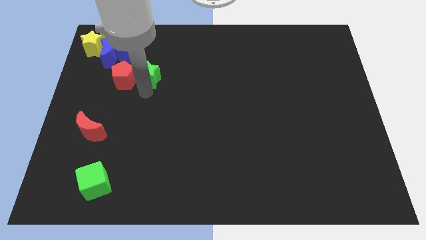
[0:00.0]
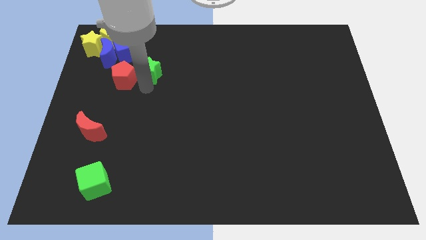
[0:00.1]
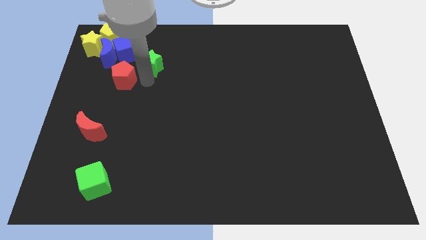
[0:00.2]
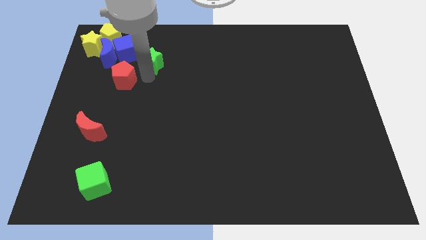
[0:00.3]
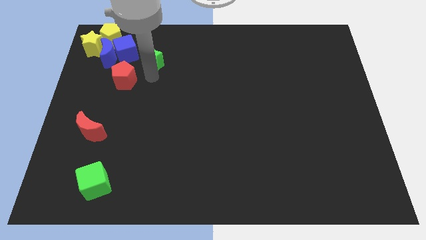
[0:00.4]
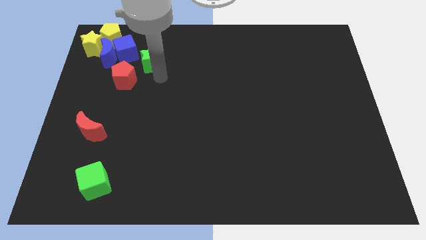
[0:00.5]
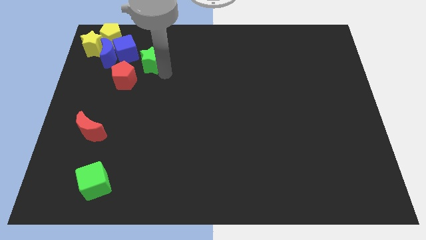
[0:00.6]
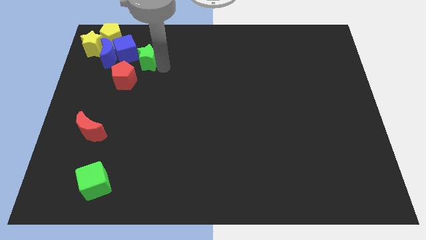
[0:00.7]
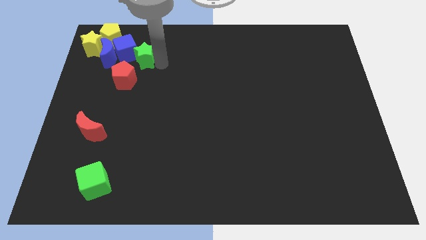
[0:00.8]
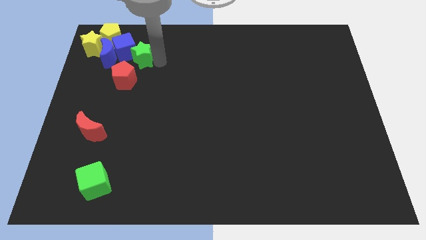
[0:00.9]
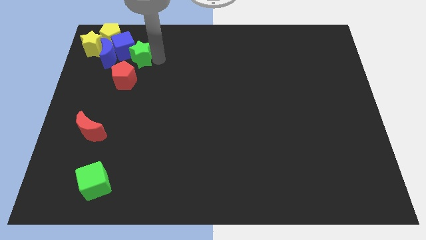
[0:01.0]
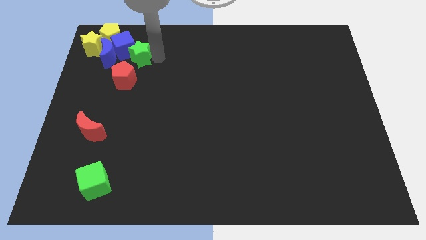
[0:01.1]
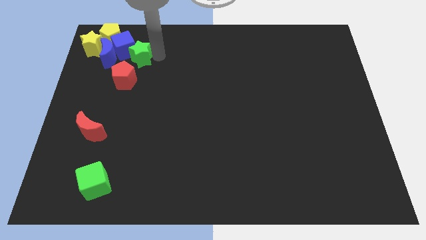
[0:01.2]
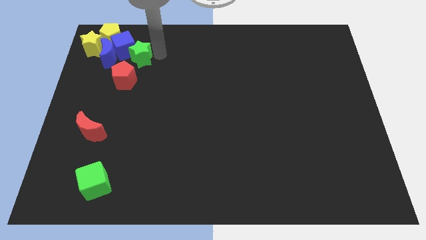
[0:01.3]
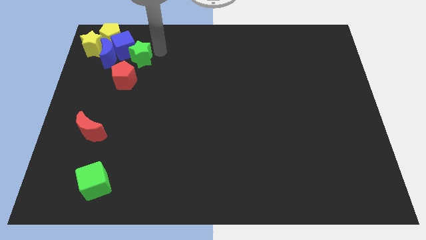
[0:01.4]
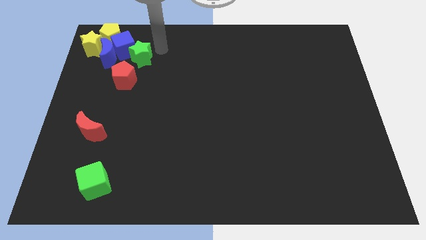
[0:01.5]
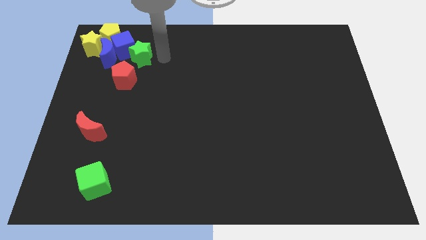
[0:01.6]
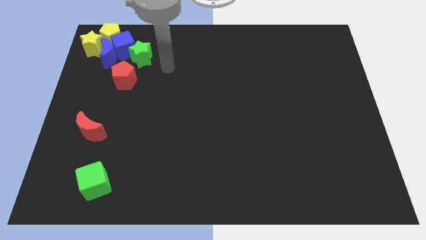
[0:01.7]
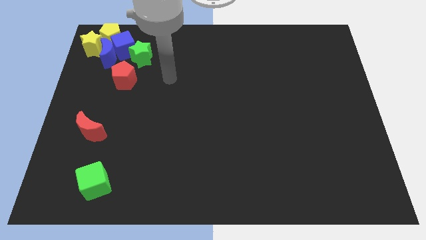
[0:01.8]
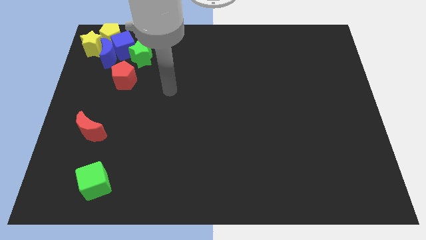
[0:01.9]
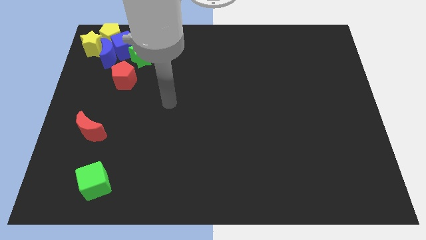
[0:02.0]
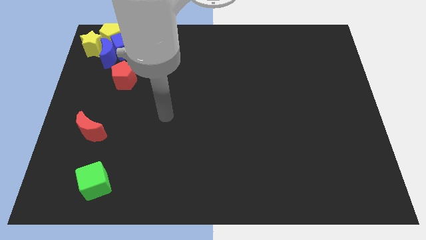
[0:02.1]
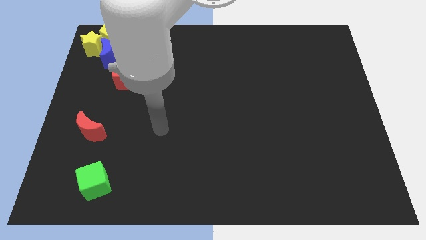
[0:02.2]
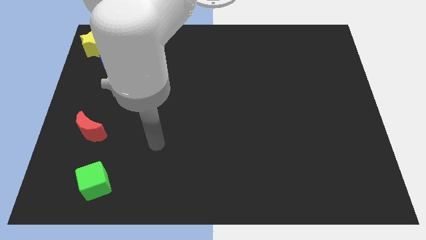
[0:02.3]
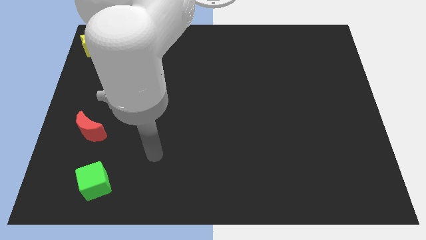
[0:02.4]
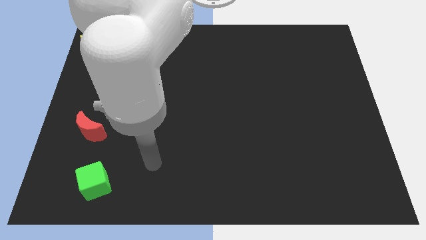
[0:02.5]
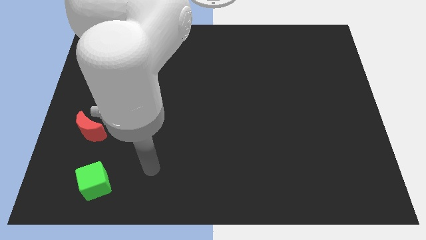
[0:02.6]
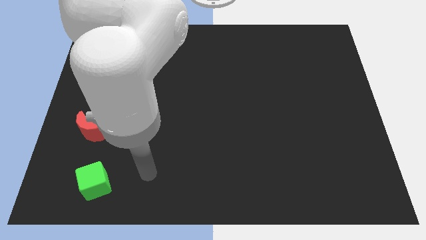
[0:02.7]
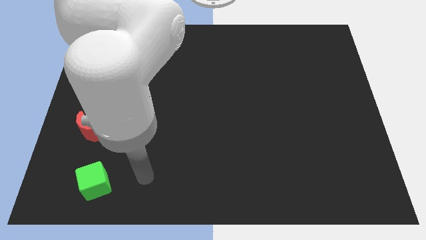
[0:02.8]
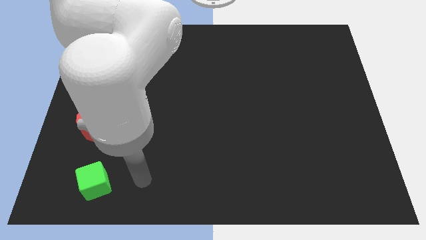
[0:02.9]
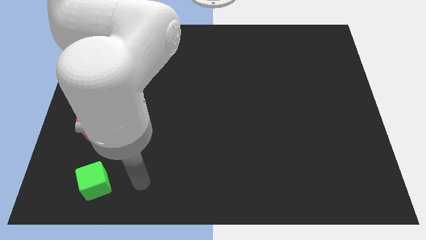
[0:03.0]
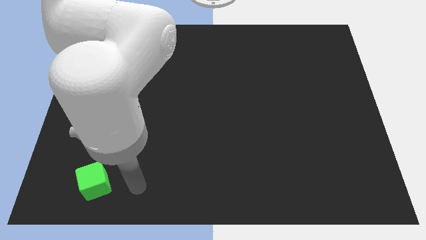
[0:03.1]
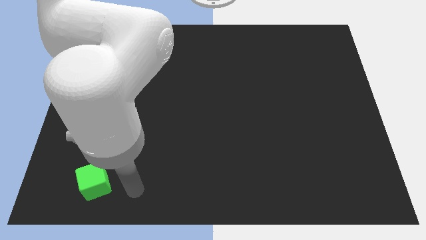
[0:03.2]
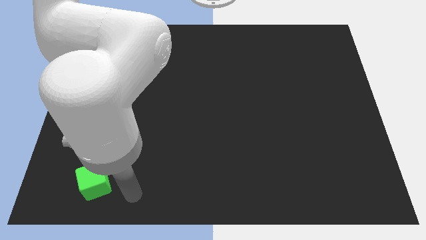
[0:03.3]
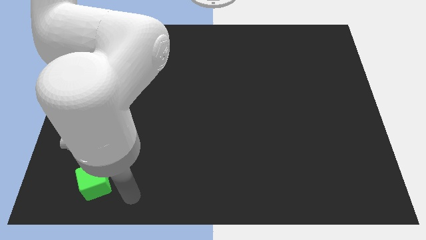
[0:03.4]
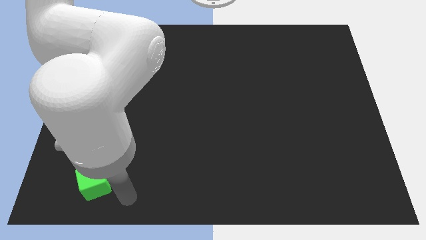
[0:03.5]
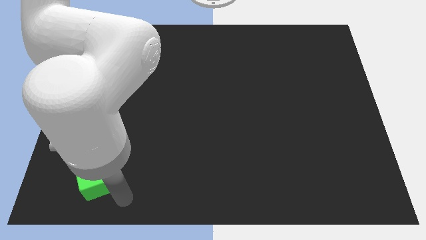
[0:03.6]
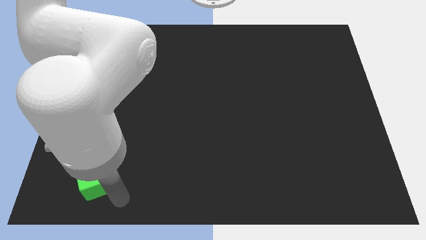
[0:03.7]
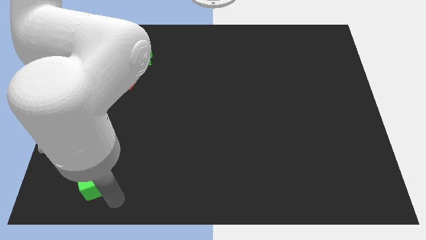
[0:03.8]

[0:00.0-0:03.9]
push the green star into the group of blocks

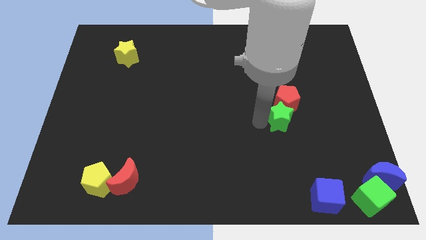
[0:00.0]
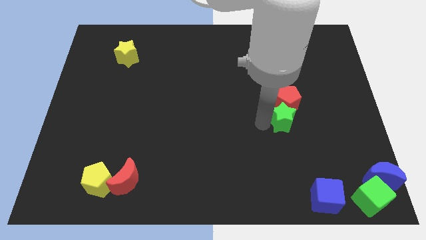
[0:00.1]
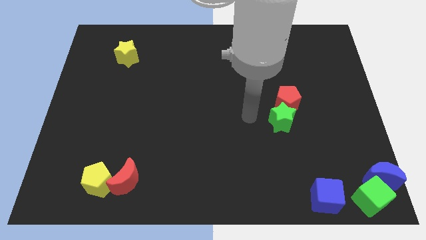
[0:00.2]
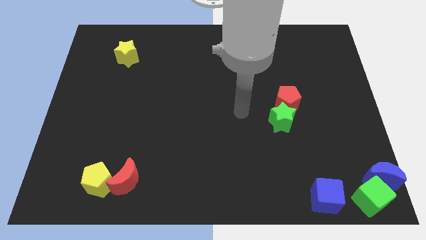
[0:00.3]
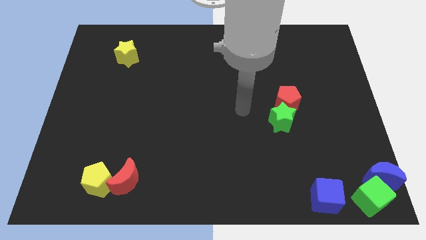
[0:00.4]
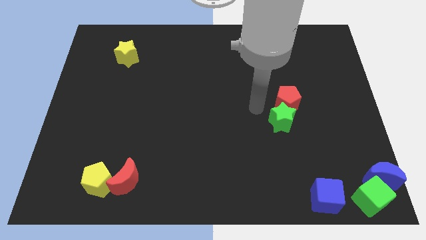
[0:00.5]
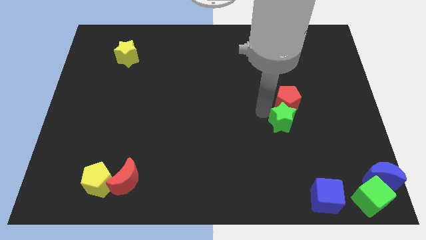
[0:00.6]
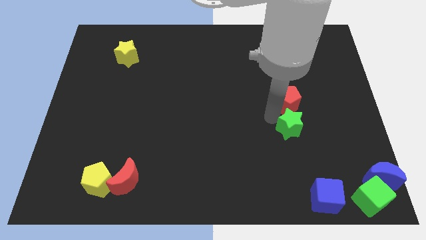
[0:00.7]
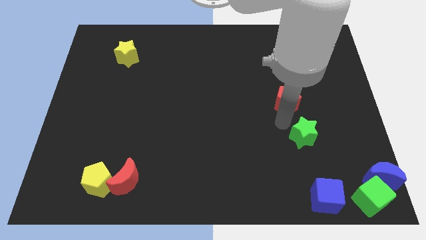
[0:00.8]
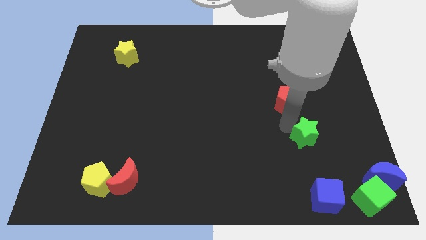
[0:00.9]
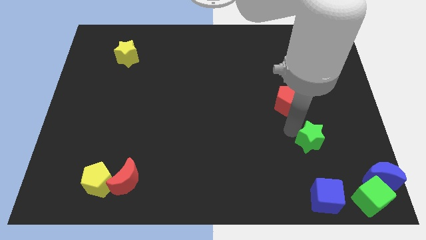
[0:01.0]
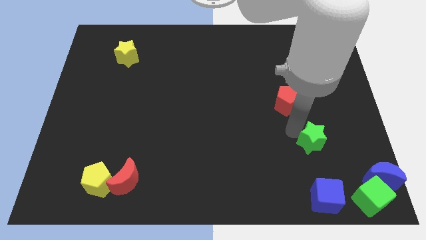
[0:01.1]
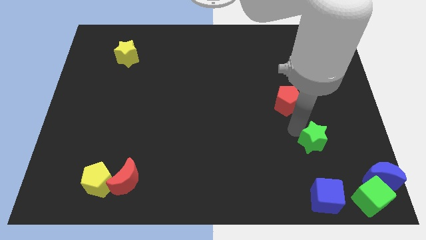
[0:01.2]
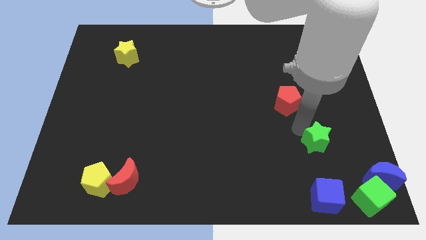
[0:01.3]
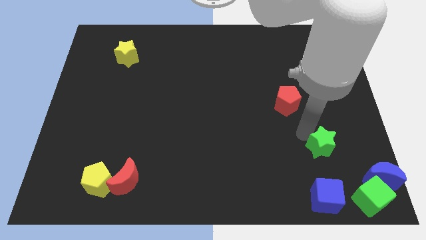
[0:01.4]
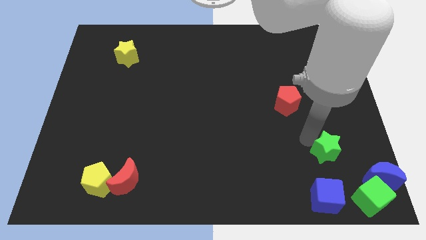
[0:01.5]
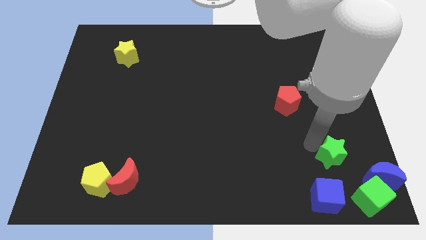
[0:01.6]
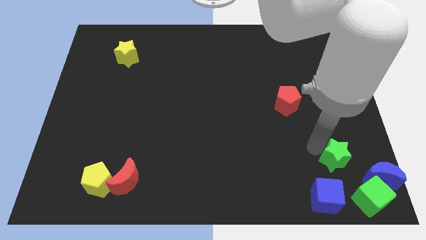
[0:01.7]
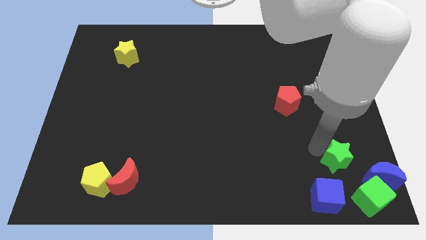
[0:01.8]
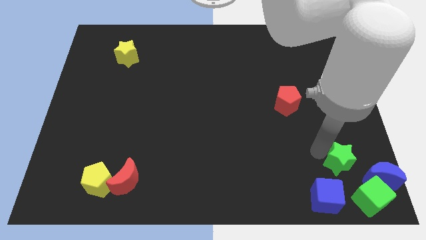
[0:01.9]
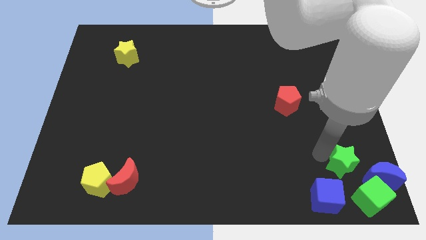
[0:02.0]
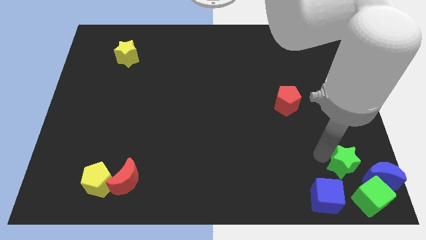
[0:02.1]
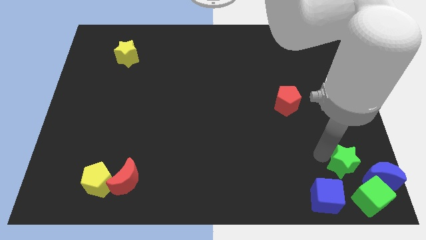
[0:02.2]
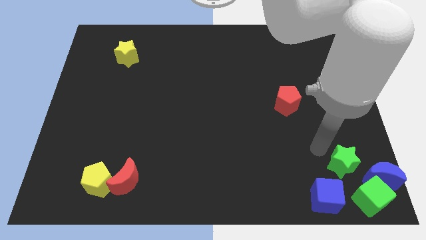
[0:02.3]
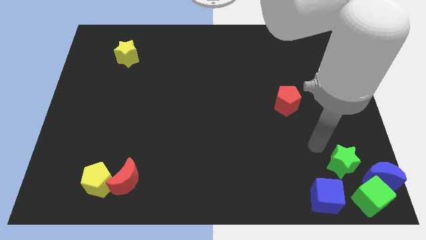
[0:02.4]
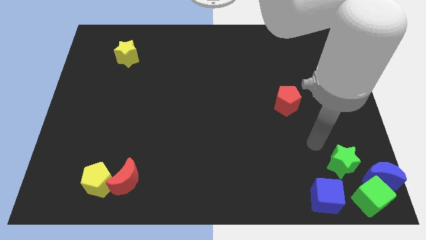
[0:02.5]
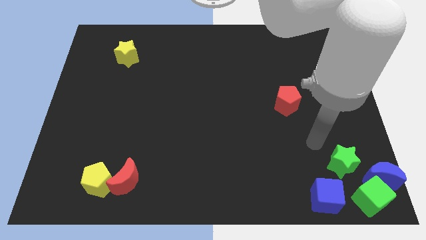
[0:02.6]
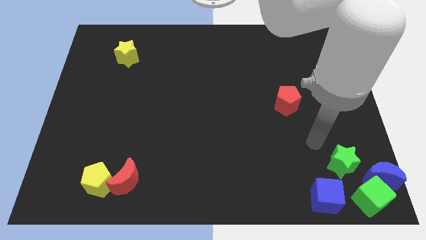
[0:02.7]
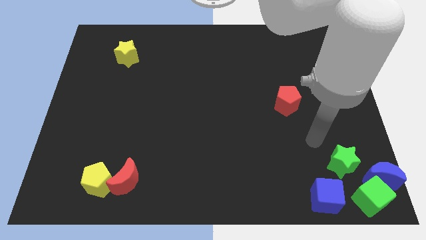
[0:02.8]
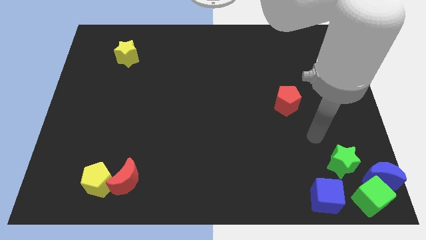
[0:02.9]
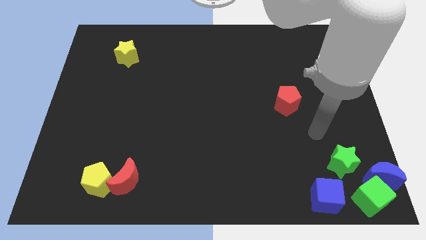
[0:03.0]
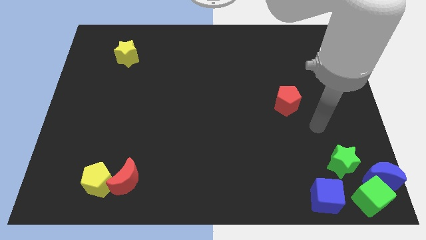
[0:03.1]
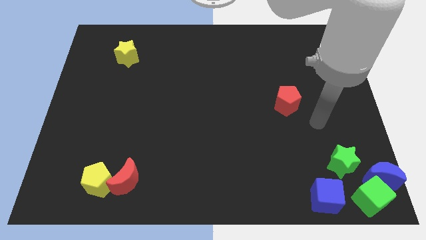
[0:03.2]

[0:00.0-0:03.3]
push the green star towards the blue moon and green cube

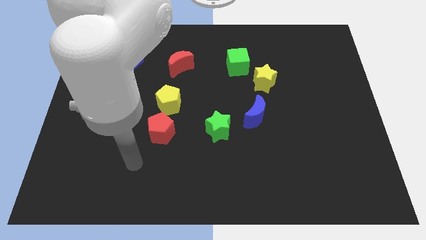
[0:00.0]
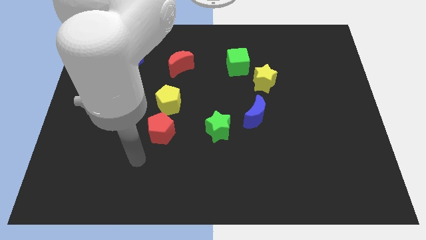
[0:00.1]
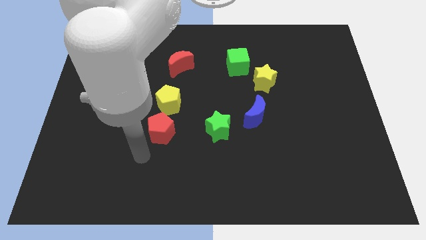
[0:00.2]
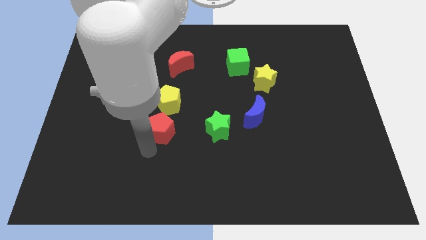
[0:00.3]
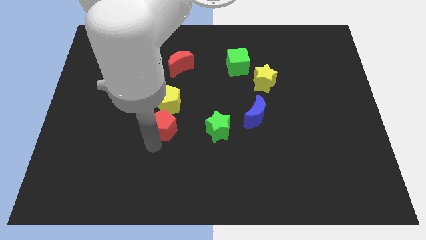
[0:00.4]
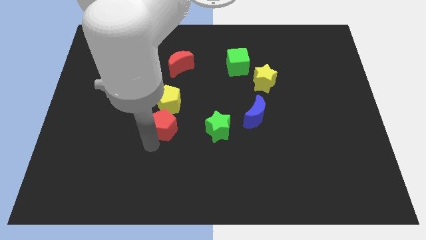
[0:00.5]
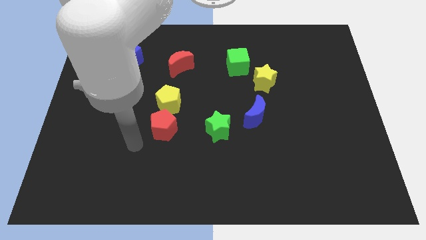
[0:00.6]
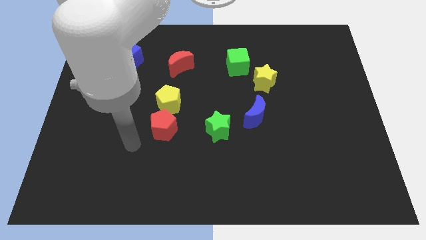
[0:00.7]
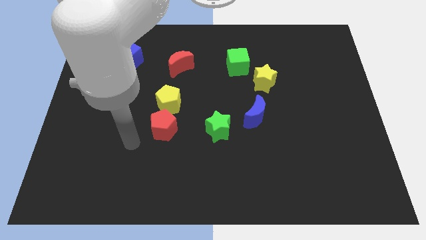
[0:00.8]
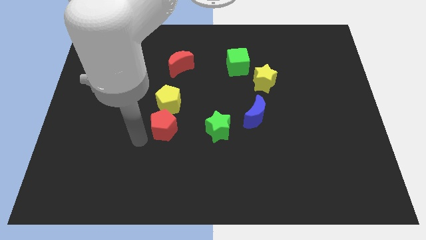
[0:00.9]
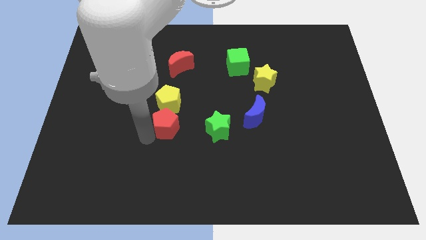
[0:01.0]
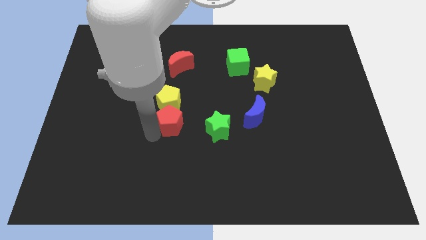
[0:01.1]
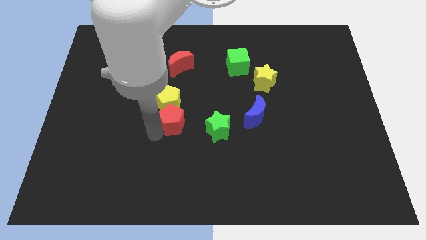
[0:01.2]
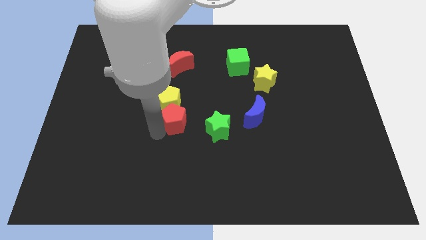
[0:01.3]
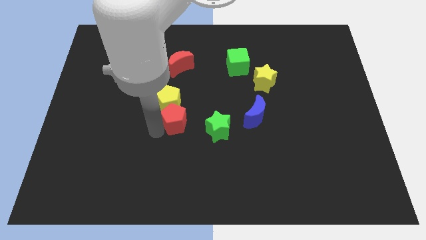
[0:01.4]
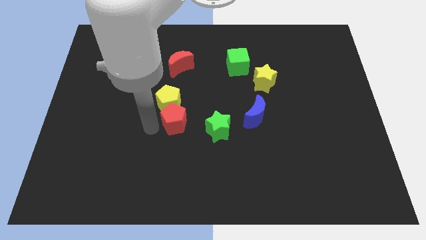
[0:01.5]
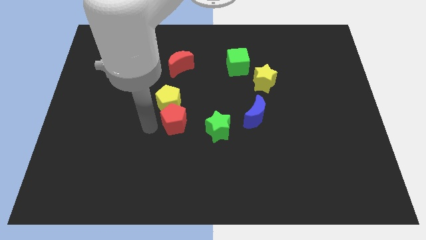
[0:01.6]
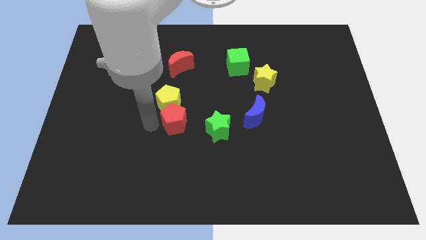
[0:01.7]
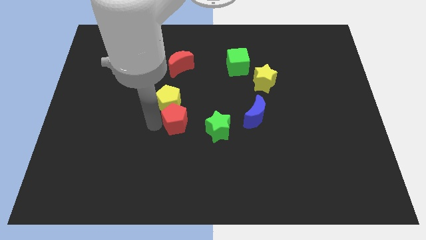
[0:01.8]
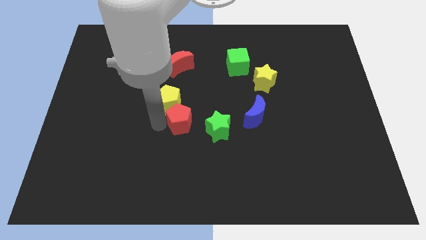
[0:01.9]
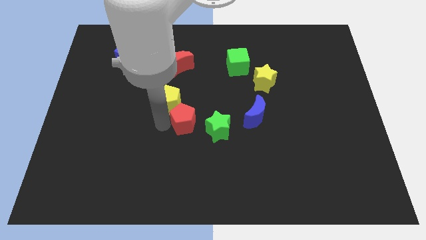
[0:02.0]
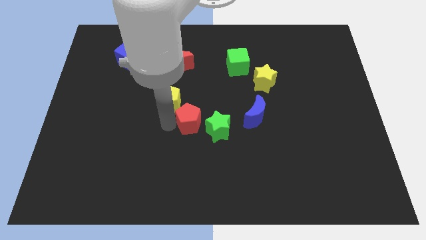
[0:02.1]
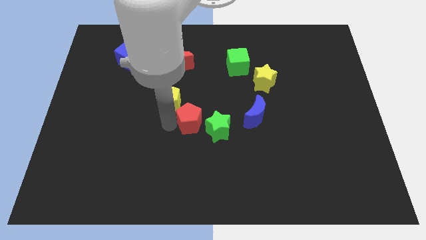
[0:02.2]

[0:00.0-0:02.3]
place the red pentagon in between the green star and yellow pentagon
